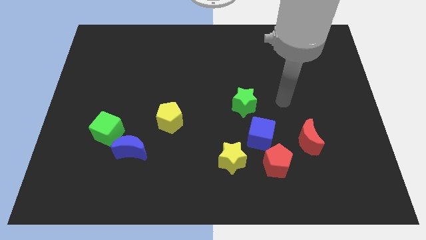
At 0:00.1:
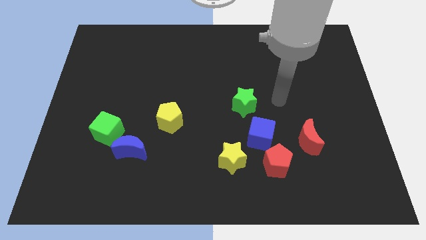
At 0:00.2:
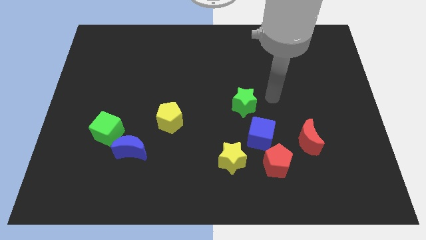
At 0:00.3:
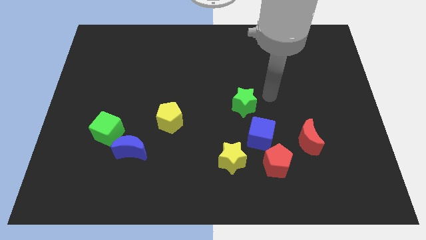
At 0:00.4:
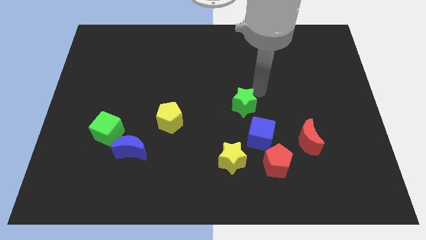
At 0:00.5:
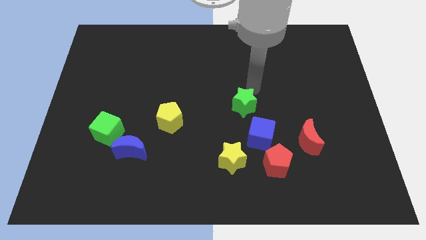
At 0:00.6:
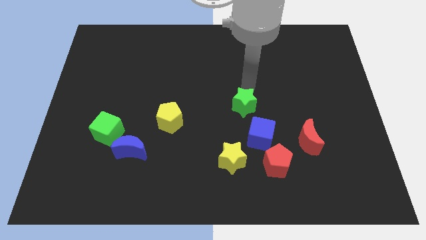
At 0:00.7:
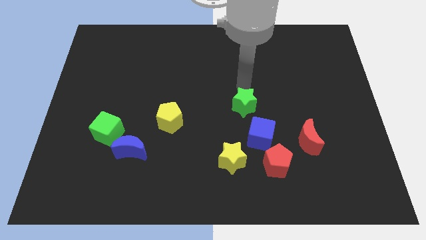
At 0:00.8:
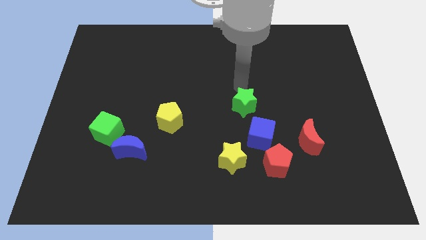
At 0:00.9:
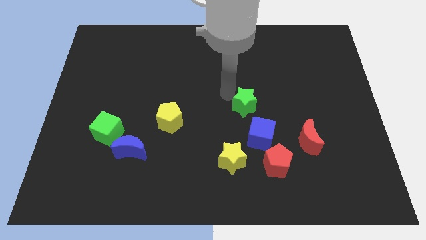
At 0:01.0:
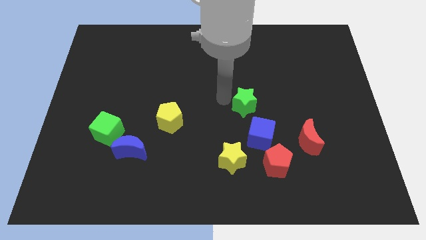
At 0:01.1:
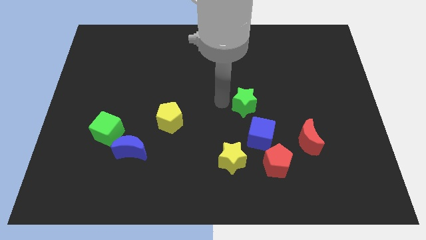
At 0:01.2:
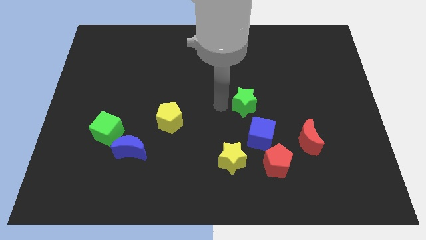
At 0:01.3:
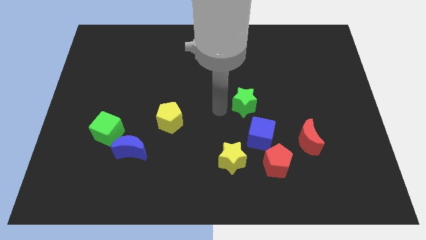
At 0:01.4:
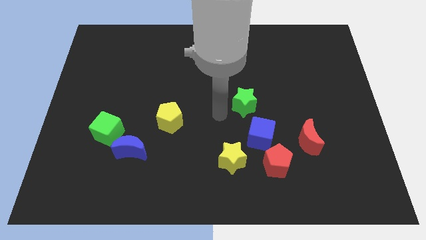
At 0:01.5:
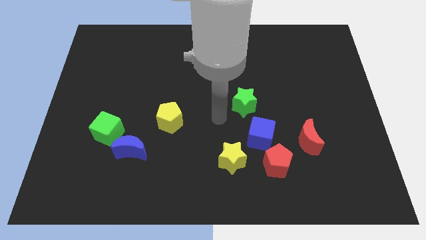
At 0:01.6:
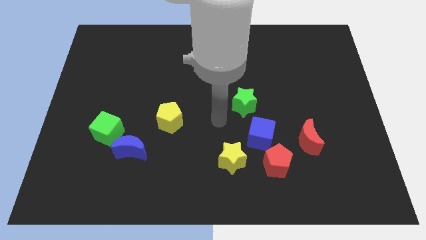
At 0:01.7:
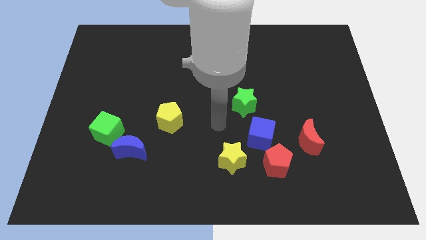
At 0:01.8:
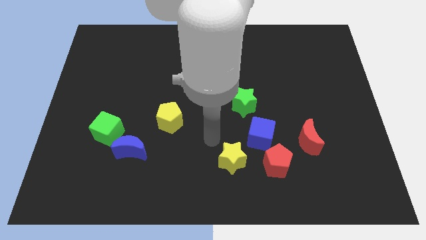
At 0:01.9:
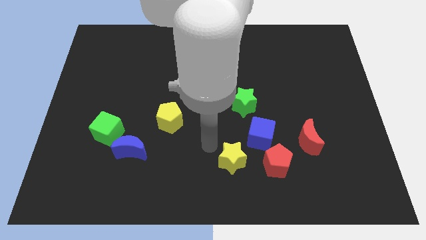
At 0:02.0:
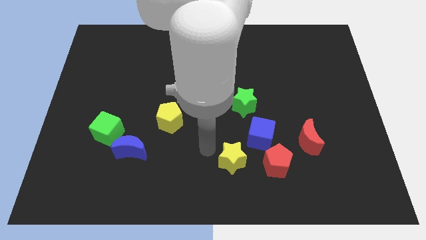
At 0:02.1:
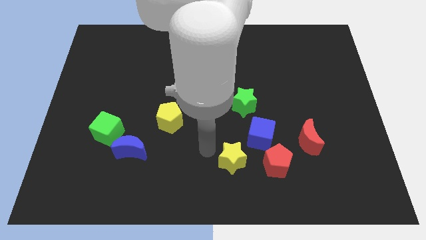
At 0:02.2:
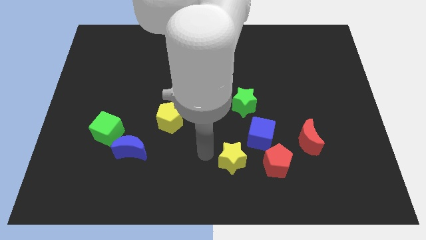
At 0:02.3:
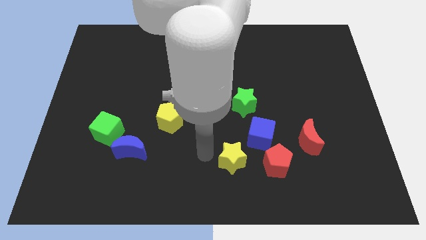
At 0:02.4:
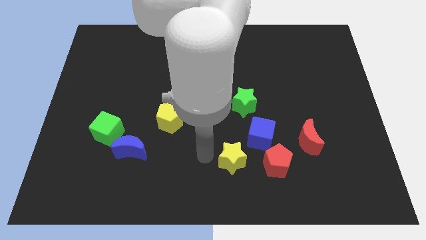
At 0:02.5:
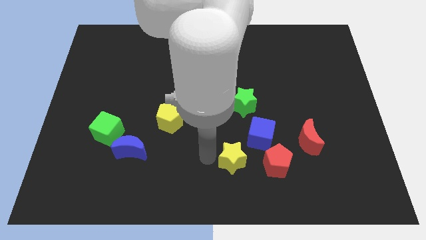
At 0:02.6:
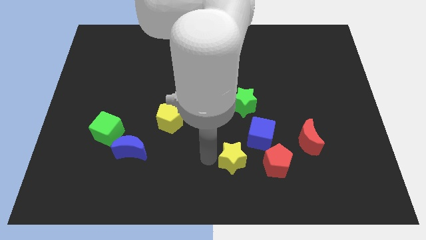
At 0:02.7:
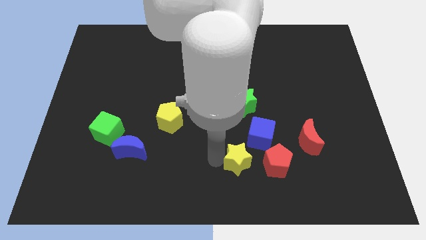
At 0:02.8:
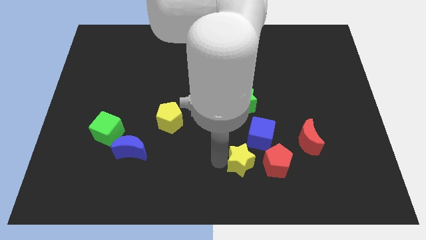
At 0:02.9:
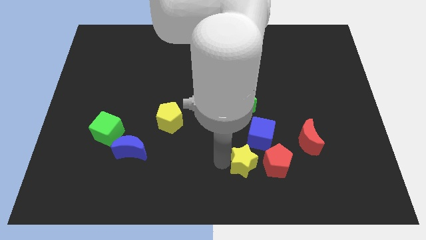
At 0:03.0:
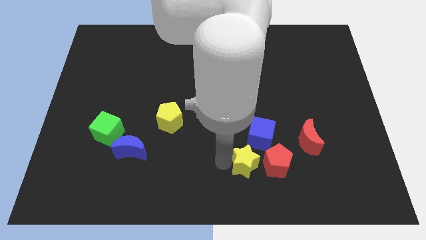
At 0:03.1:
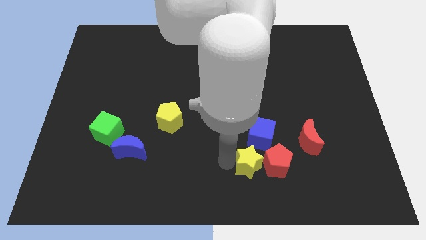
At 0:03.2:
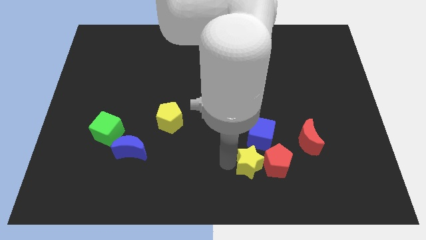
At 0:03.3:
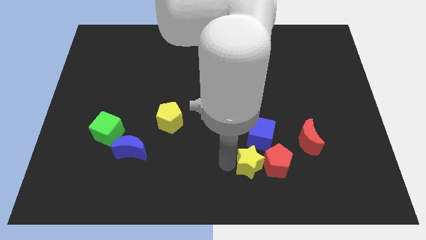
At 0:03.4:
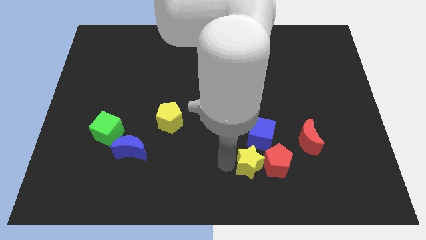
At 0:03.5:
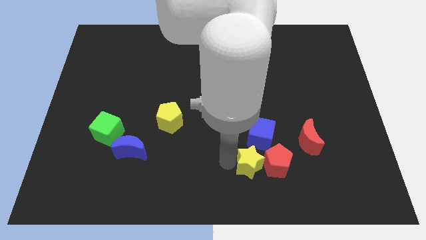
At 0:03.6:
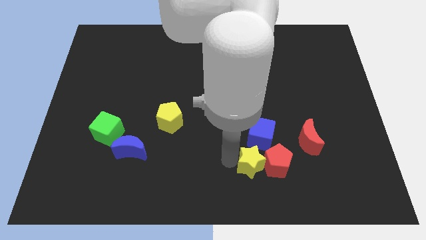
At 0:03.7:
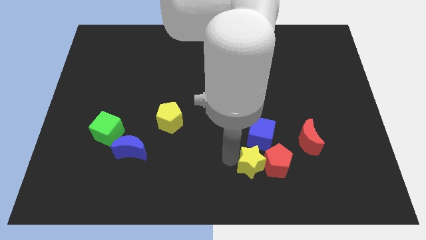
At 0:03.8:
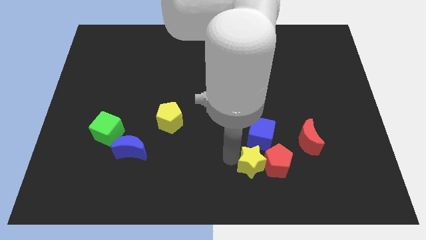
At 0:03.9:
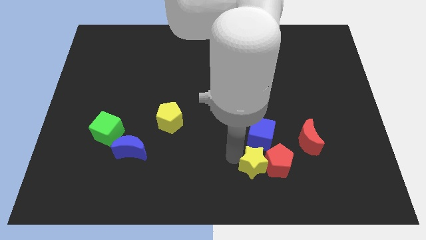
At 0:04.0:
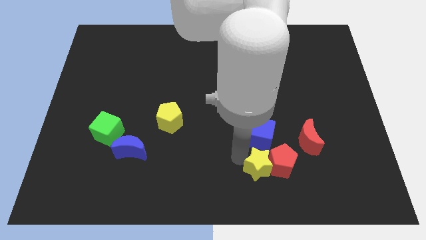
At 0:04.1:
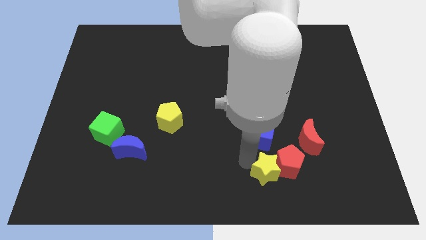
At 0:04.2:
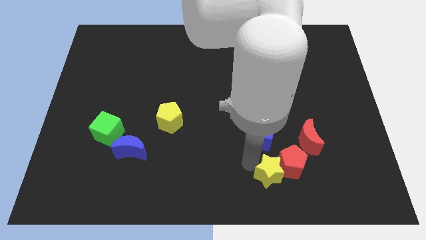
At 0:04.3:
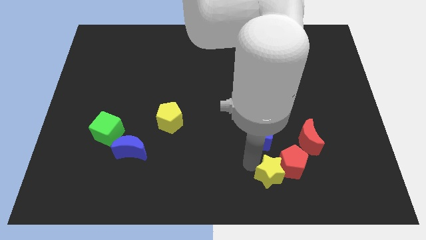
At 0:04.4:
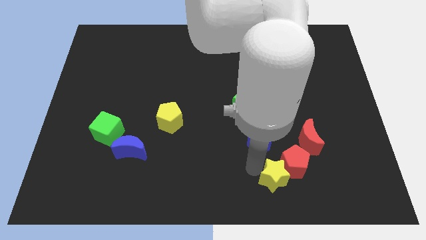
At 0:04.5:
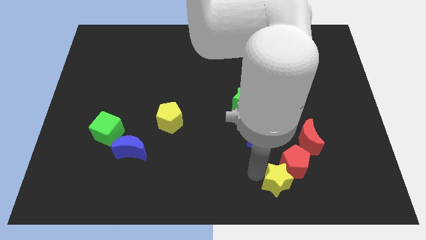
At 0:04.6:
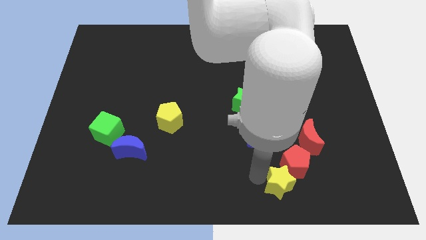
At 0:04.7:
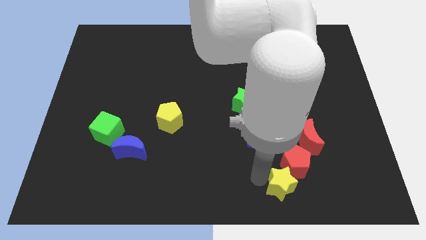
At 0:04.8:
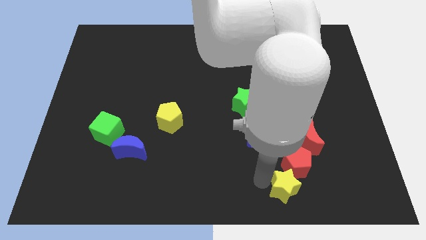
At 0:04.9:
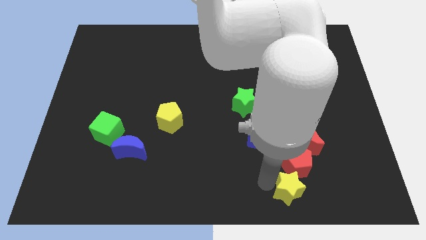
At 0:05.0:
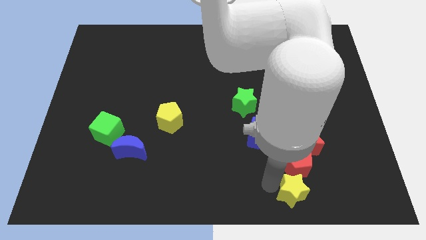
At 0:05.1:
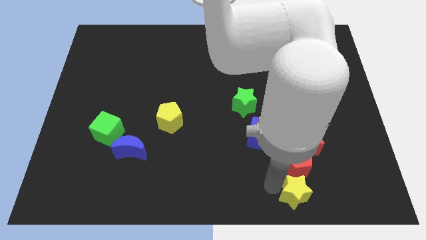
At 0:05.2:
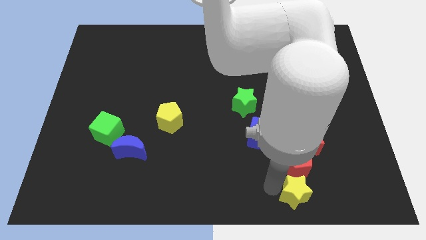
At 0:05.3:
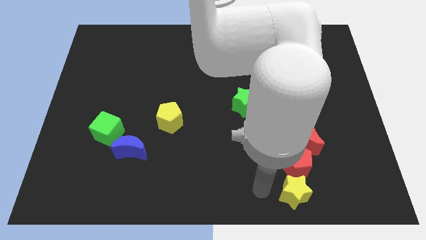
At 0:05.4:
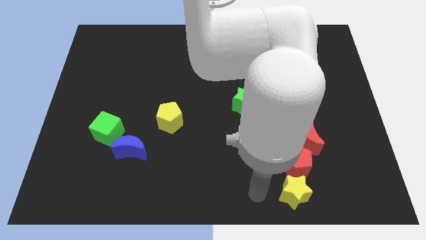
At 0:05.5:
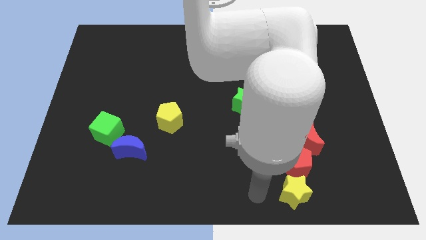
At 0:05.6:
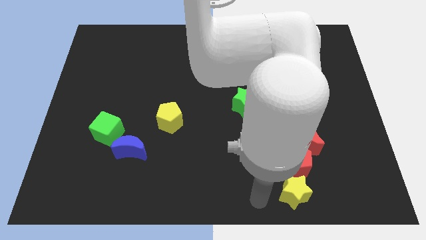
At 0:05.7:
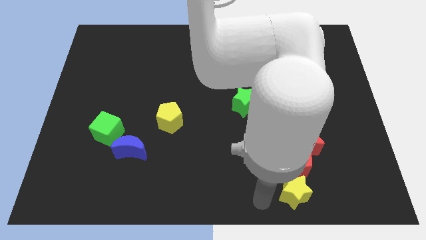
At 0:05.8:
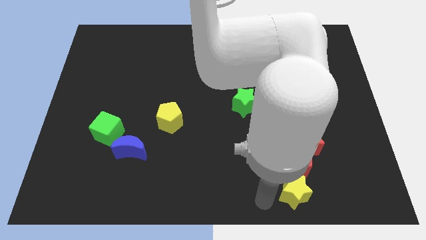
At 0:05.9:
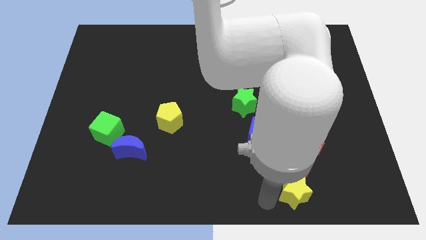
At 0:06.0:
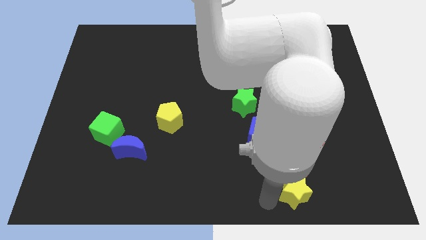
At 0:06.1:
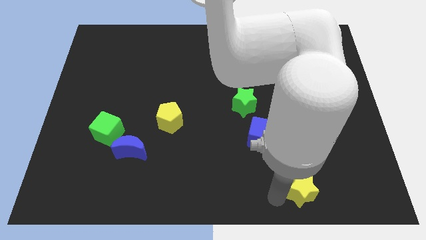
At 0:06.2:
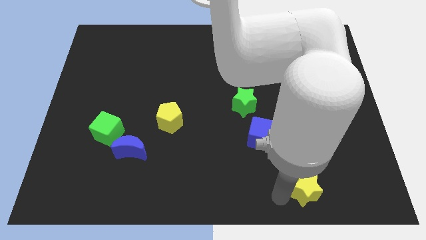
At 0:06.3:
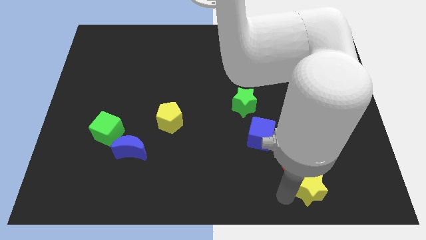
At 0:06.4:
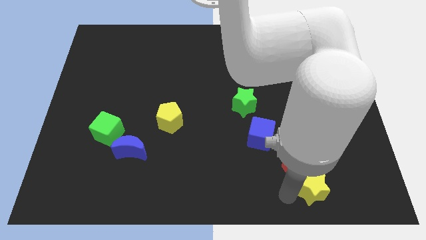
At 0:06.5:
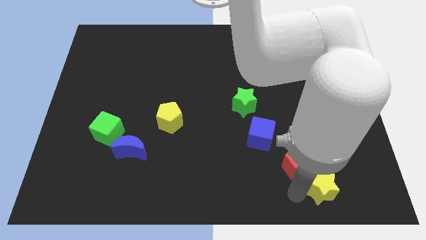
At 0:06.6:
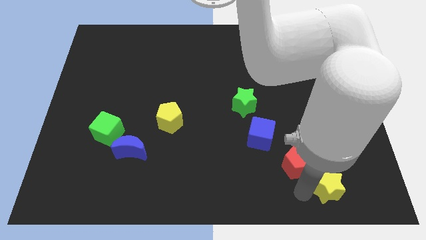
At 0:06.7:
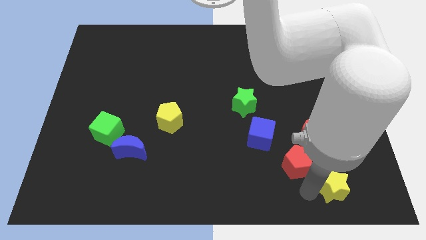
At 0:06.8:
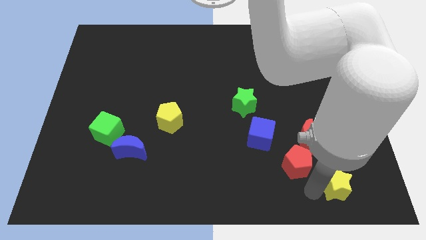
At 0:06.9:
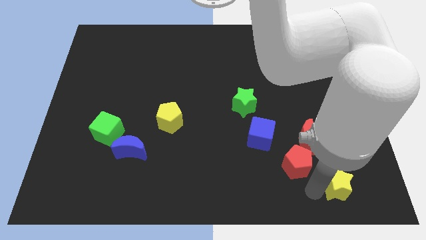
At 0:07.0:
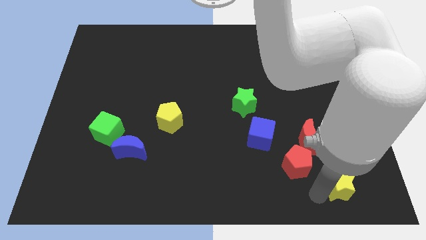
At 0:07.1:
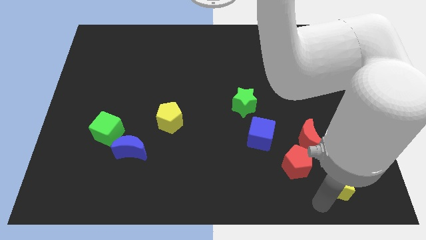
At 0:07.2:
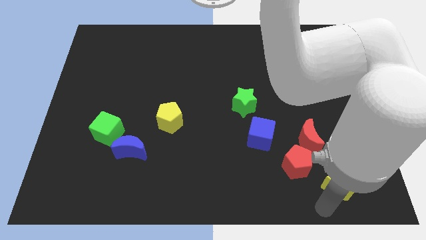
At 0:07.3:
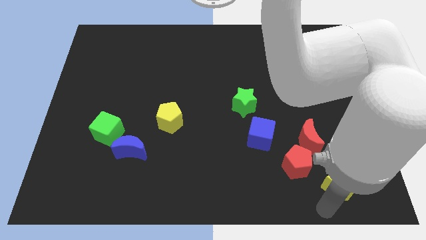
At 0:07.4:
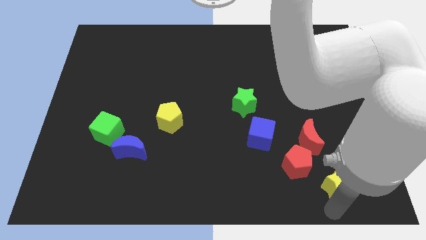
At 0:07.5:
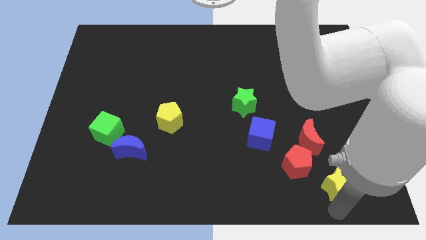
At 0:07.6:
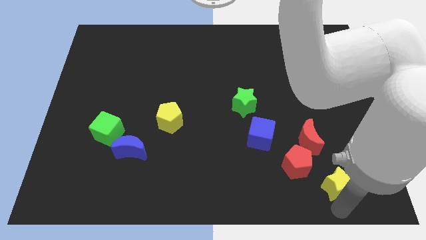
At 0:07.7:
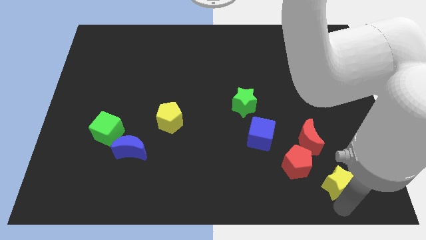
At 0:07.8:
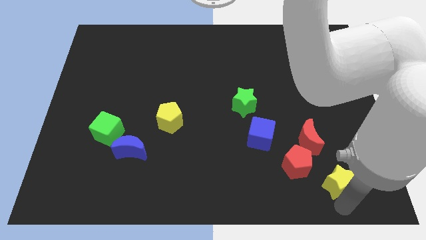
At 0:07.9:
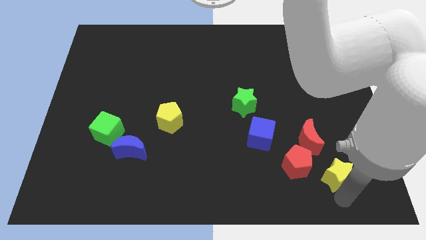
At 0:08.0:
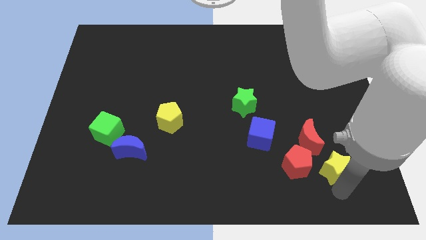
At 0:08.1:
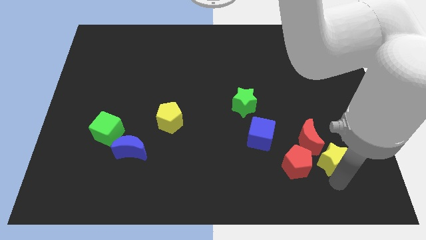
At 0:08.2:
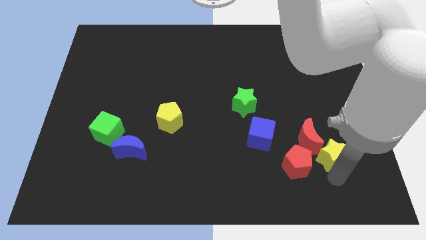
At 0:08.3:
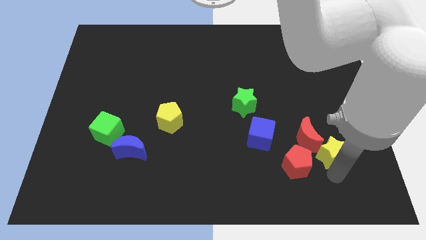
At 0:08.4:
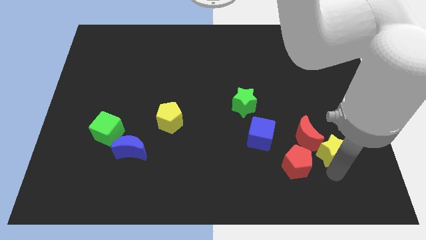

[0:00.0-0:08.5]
slide the yellow star next to the red moon

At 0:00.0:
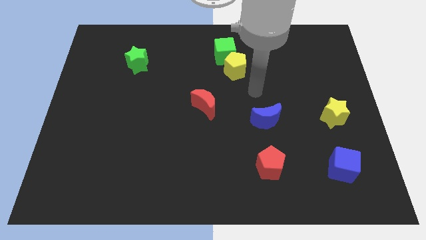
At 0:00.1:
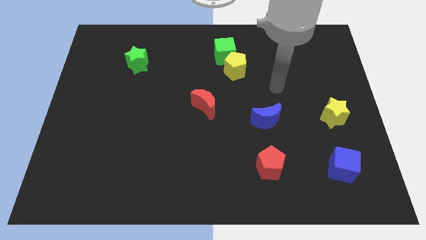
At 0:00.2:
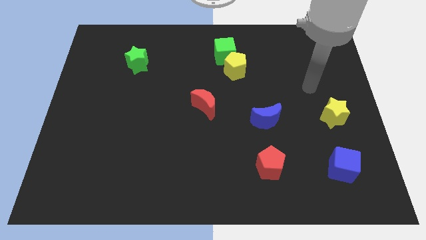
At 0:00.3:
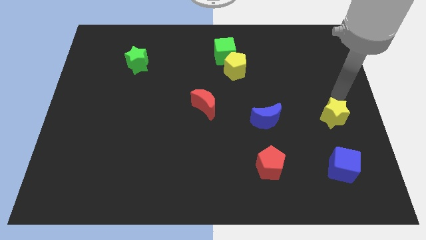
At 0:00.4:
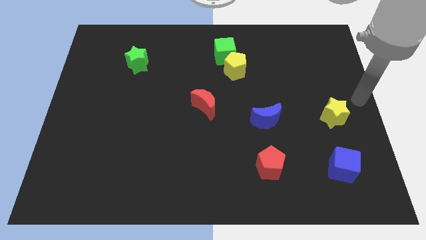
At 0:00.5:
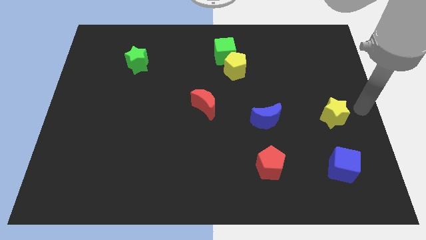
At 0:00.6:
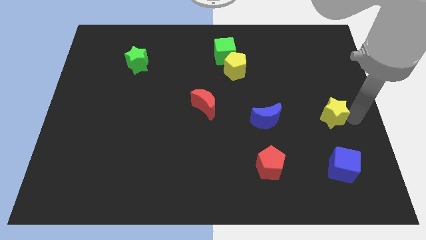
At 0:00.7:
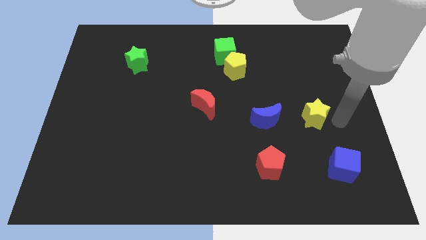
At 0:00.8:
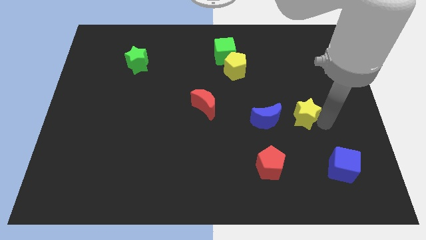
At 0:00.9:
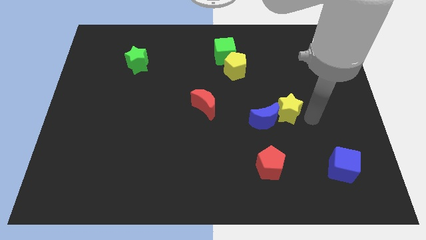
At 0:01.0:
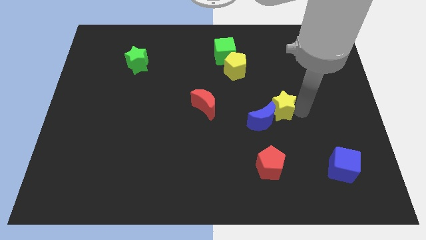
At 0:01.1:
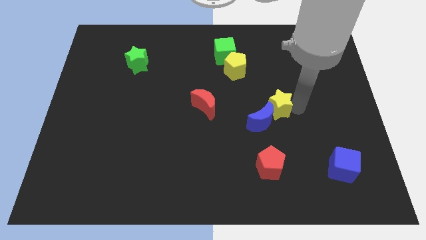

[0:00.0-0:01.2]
push the yellow star next to the blue moon
